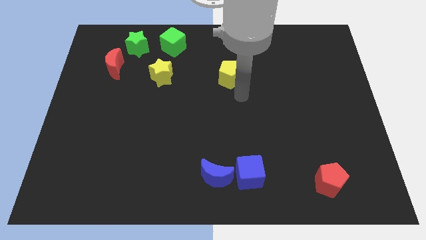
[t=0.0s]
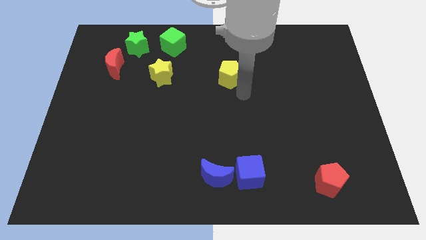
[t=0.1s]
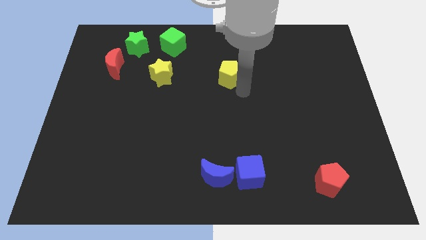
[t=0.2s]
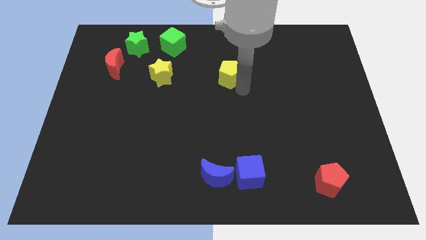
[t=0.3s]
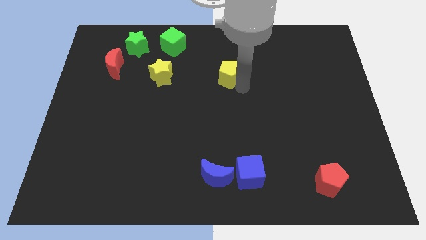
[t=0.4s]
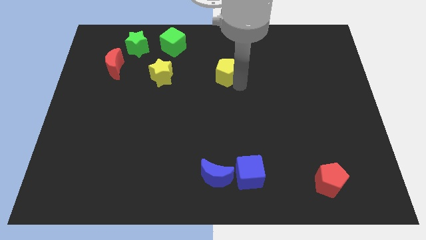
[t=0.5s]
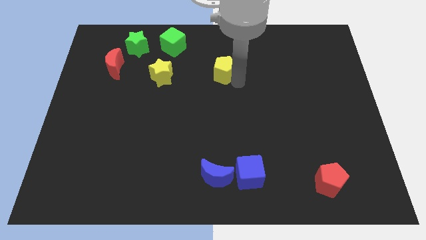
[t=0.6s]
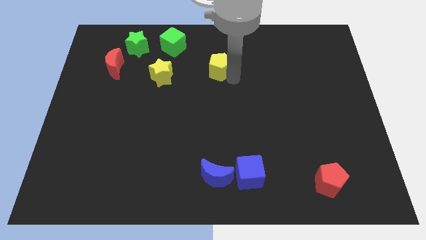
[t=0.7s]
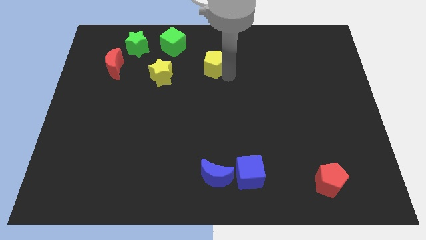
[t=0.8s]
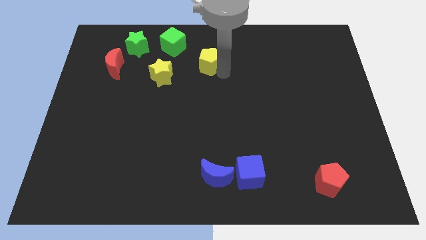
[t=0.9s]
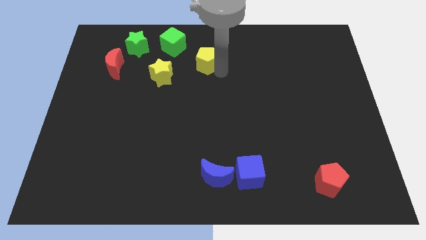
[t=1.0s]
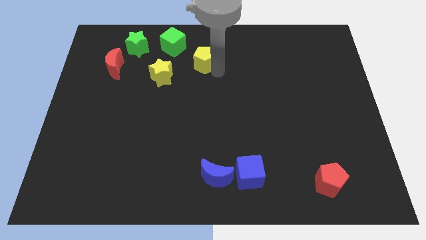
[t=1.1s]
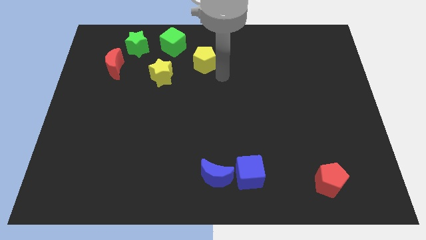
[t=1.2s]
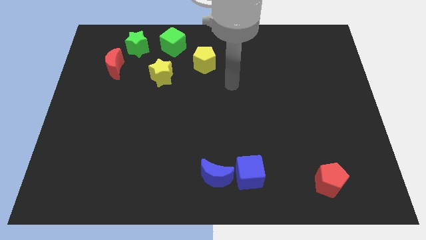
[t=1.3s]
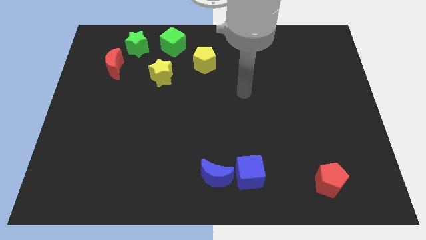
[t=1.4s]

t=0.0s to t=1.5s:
move the yellow pentagon below the green cube

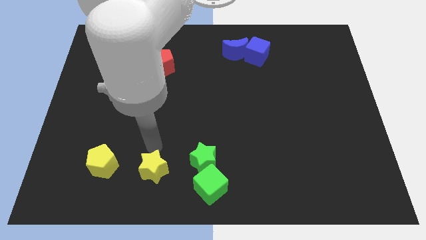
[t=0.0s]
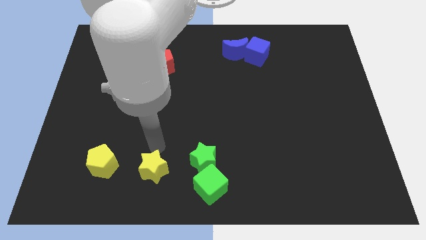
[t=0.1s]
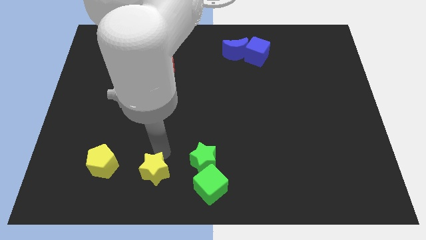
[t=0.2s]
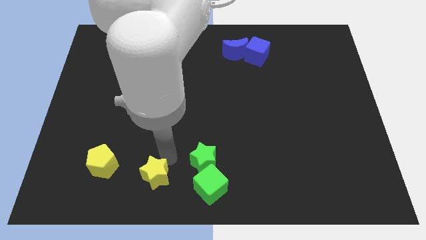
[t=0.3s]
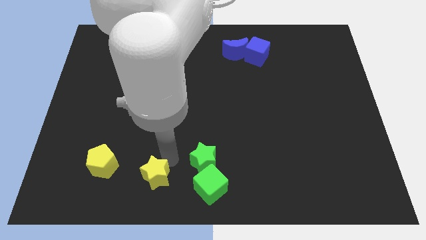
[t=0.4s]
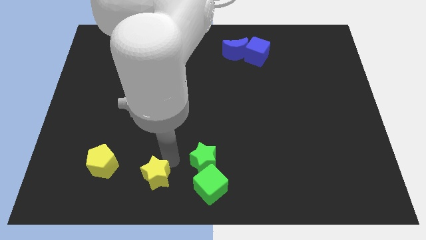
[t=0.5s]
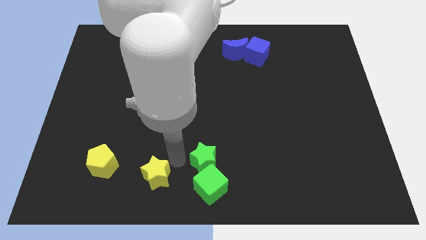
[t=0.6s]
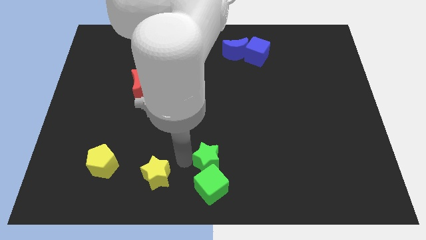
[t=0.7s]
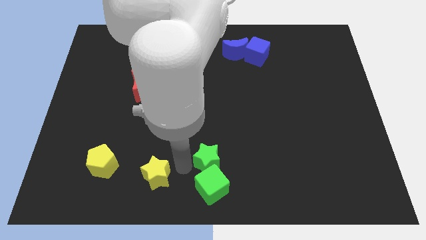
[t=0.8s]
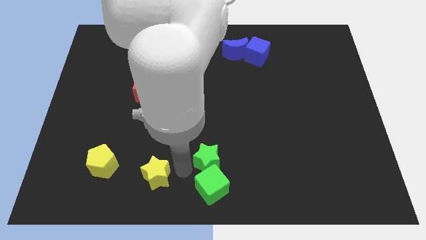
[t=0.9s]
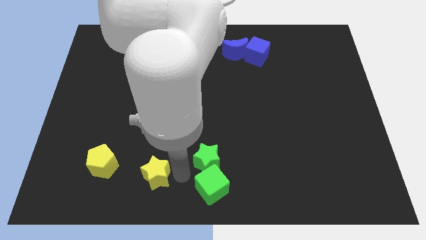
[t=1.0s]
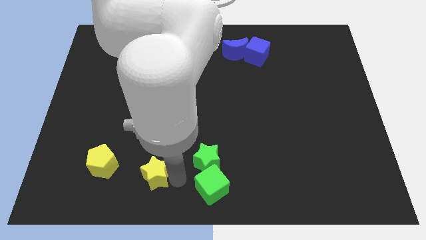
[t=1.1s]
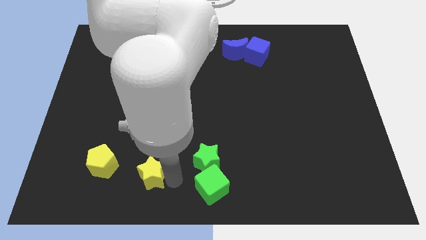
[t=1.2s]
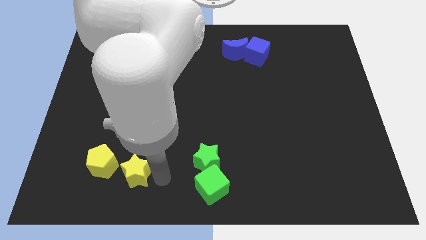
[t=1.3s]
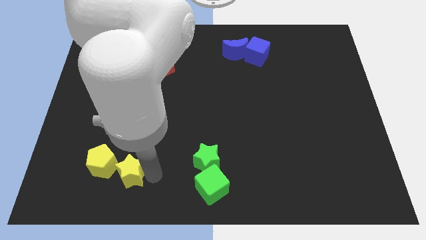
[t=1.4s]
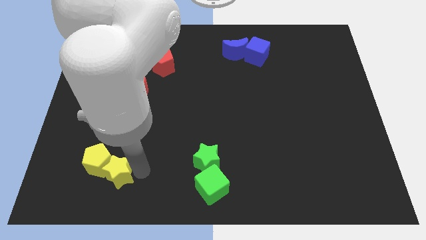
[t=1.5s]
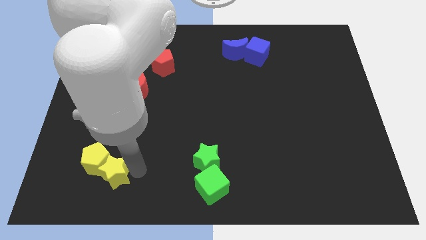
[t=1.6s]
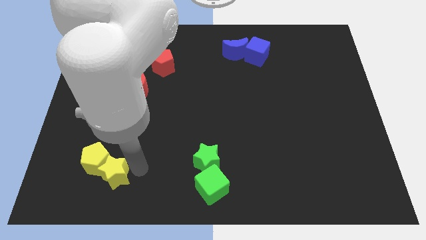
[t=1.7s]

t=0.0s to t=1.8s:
move the yellow star into the yellow pentagon

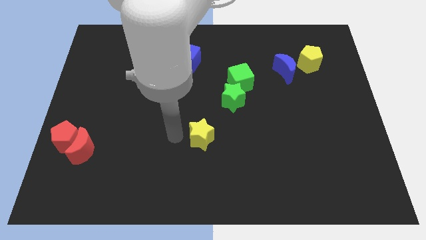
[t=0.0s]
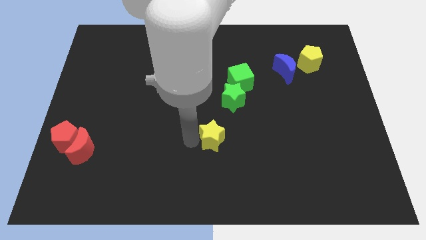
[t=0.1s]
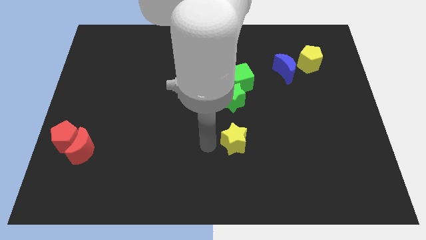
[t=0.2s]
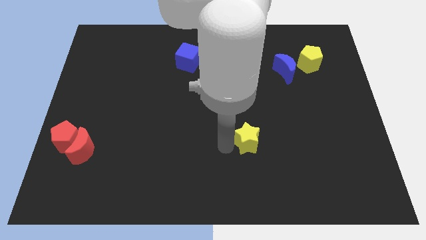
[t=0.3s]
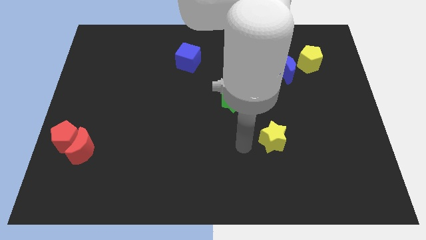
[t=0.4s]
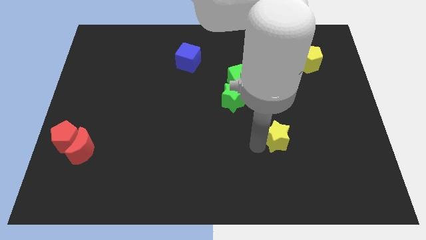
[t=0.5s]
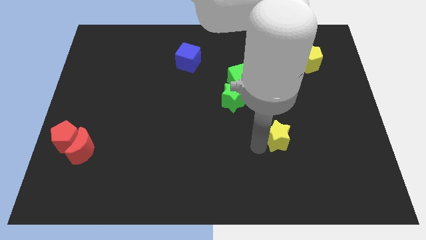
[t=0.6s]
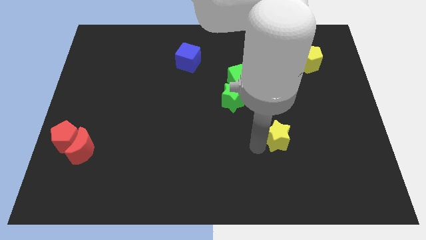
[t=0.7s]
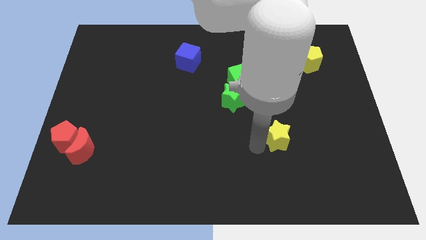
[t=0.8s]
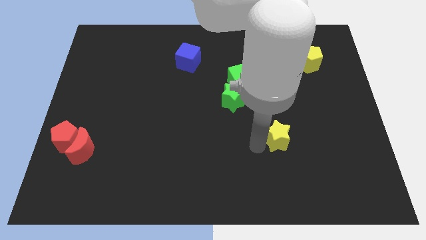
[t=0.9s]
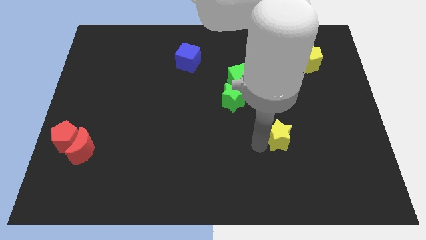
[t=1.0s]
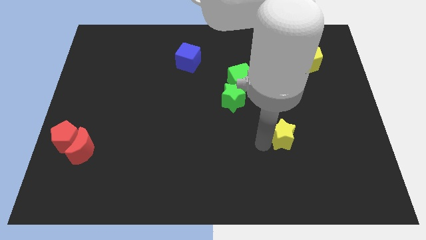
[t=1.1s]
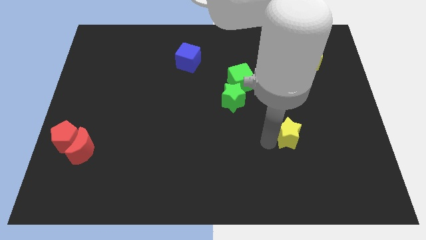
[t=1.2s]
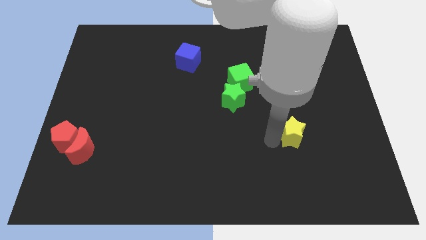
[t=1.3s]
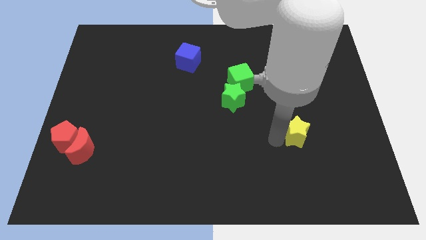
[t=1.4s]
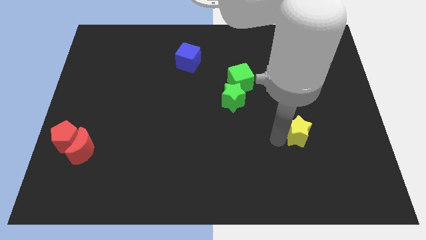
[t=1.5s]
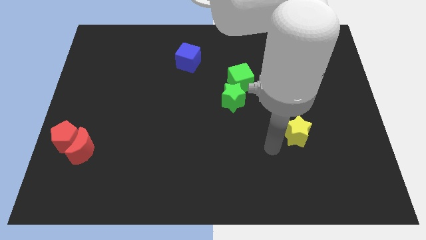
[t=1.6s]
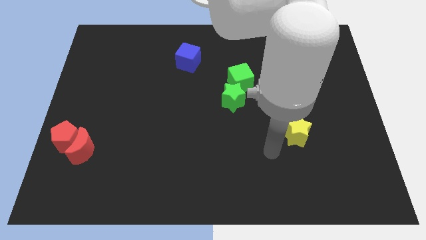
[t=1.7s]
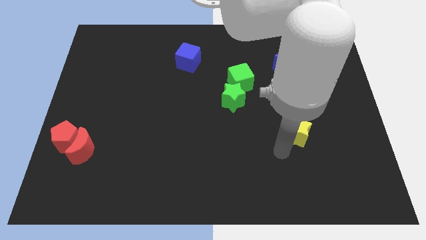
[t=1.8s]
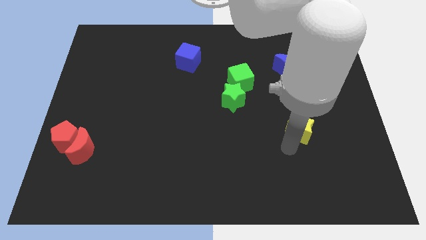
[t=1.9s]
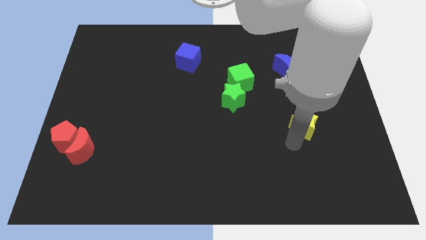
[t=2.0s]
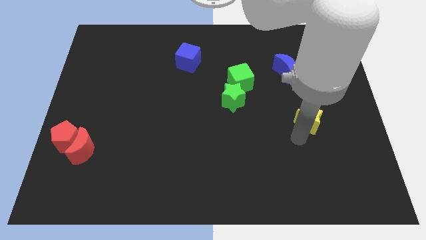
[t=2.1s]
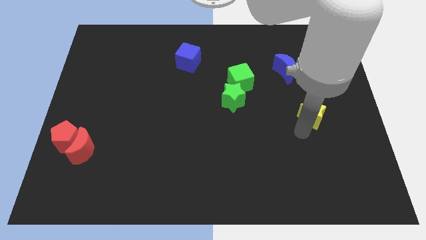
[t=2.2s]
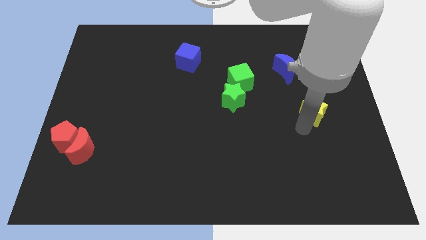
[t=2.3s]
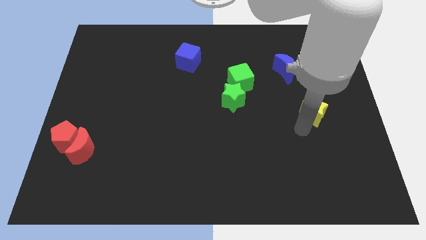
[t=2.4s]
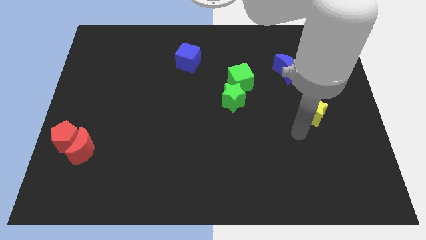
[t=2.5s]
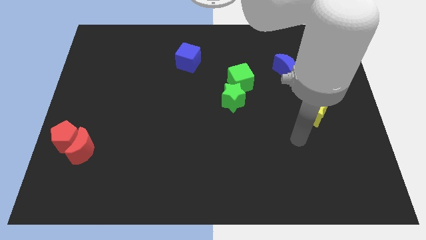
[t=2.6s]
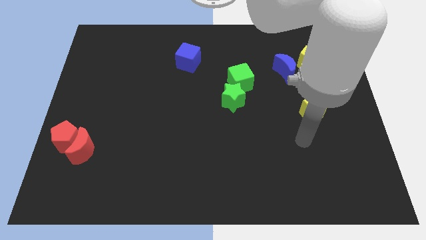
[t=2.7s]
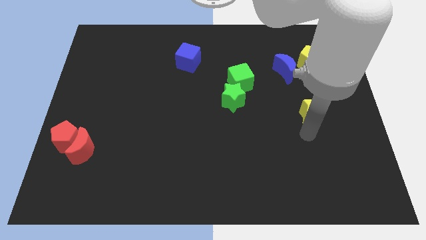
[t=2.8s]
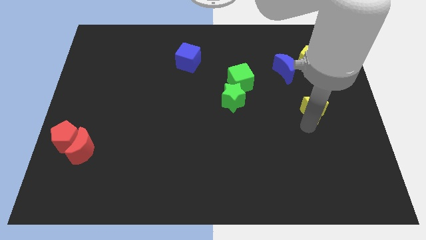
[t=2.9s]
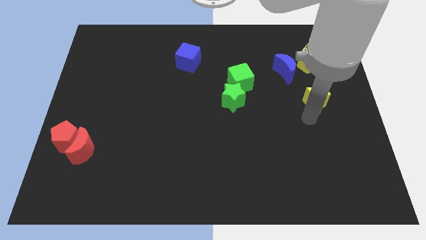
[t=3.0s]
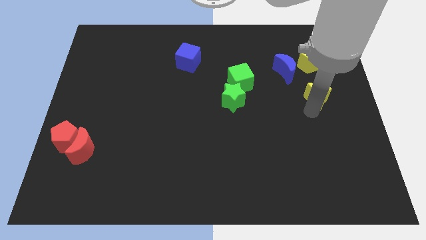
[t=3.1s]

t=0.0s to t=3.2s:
place yellow star to the bottom of the yellow pentagon

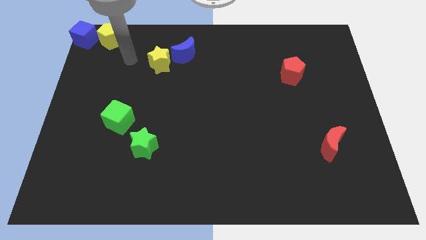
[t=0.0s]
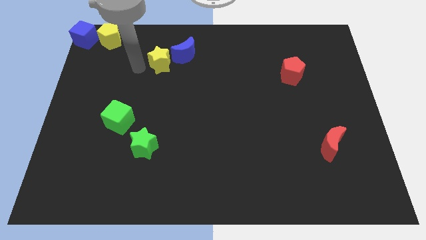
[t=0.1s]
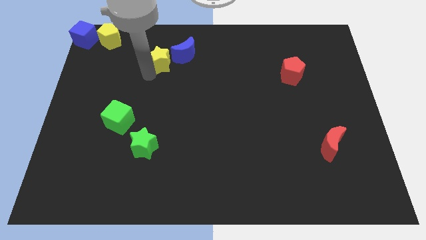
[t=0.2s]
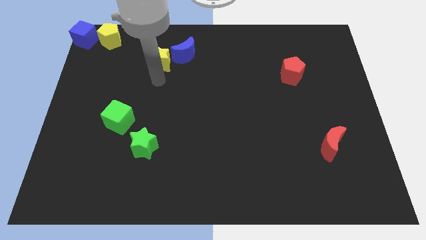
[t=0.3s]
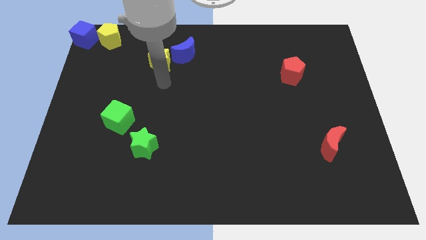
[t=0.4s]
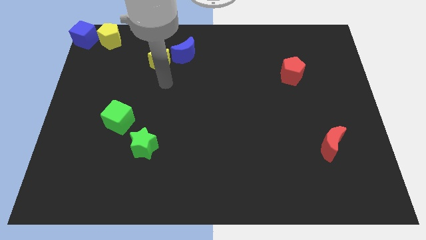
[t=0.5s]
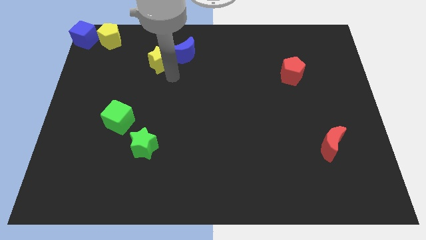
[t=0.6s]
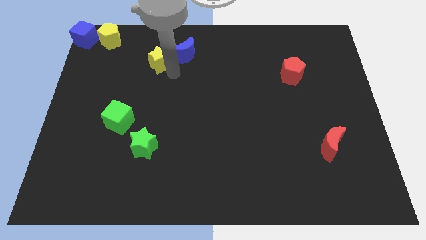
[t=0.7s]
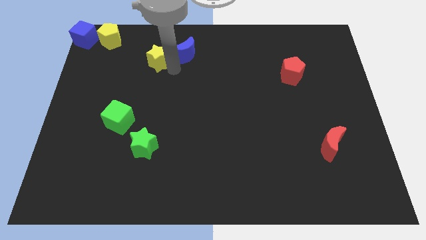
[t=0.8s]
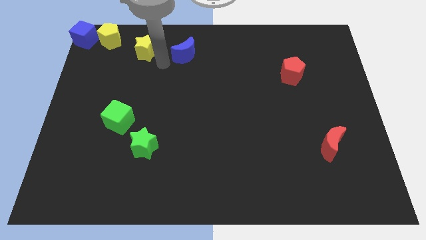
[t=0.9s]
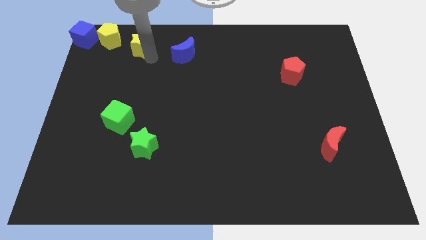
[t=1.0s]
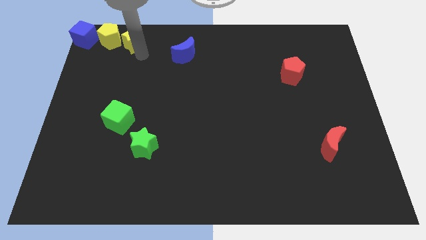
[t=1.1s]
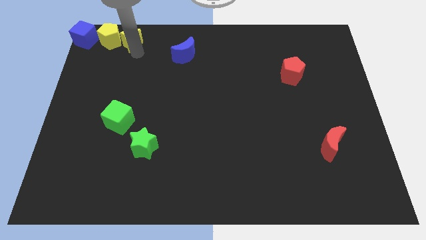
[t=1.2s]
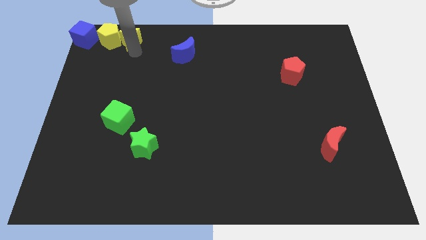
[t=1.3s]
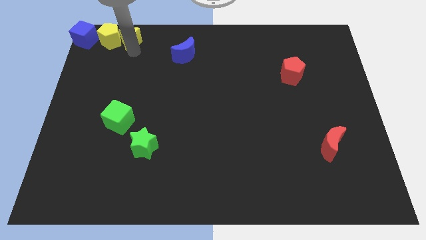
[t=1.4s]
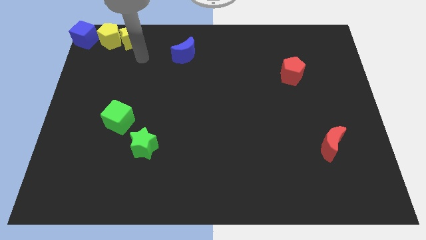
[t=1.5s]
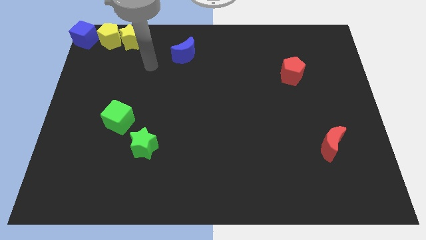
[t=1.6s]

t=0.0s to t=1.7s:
move the yellow star to the right of yellow pentagon

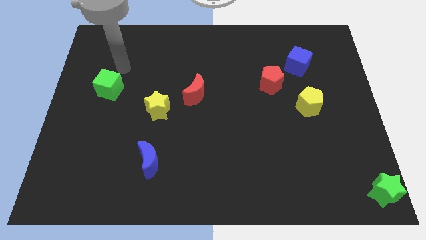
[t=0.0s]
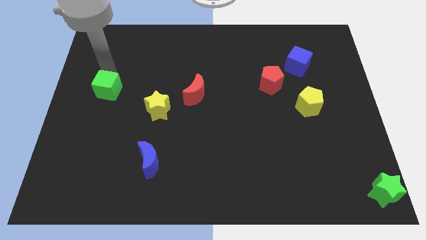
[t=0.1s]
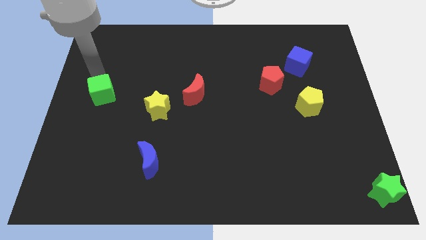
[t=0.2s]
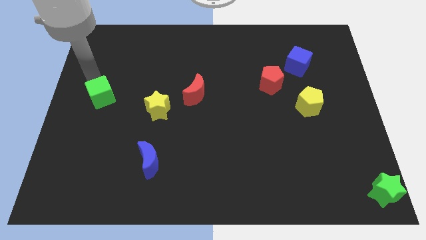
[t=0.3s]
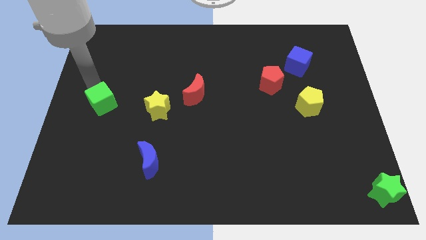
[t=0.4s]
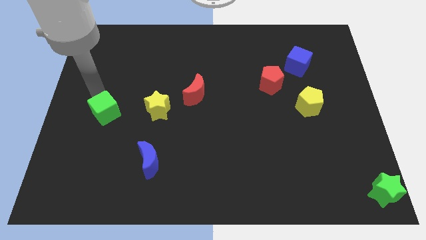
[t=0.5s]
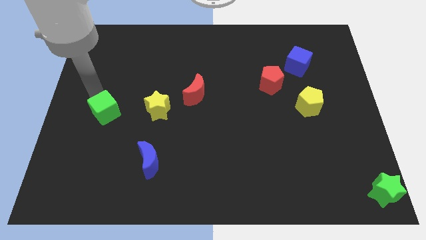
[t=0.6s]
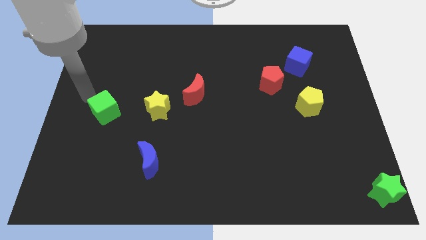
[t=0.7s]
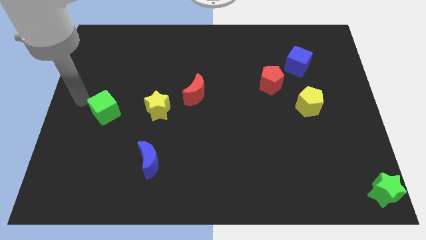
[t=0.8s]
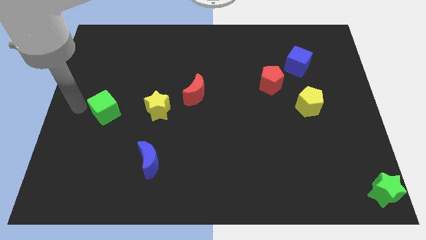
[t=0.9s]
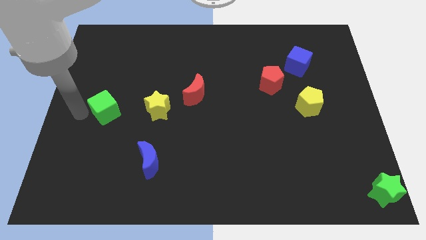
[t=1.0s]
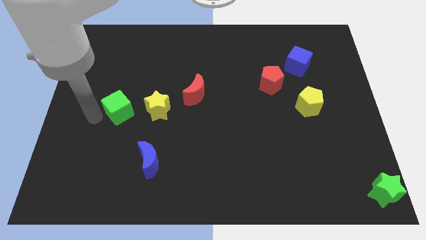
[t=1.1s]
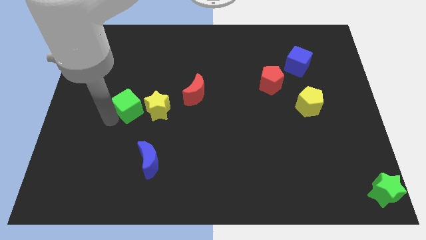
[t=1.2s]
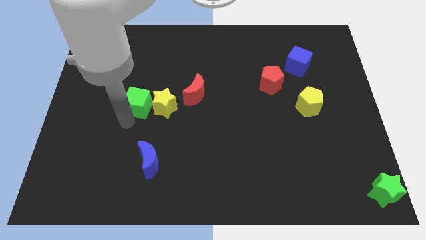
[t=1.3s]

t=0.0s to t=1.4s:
move the green cube to the left of the yellow star
